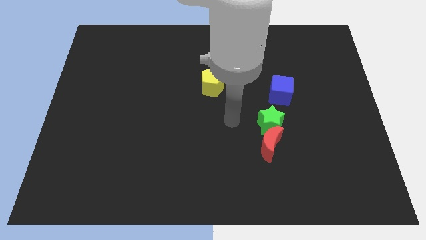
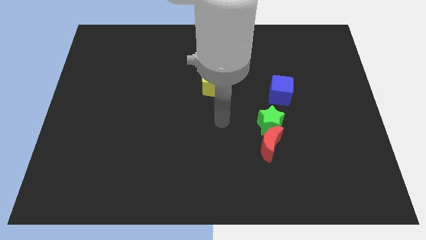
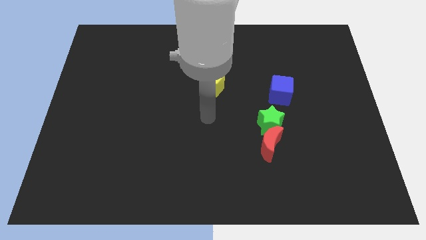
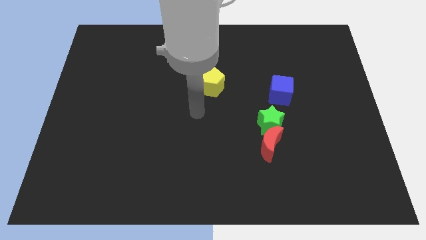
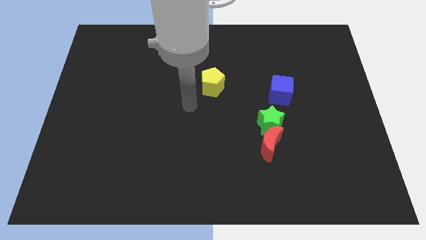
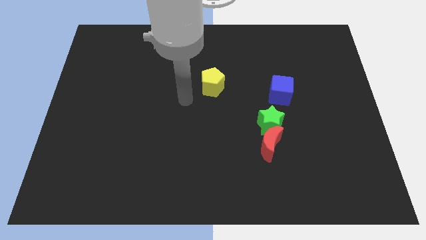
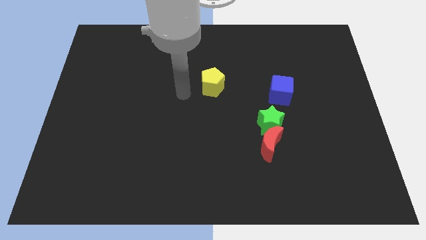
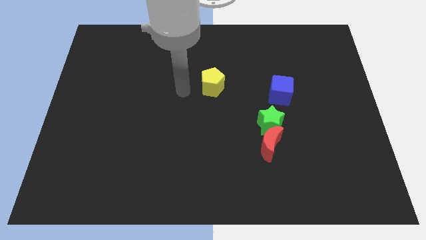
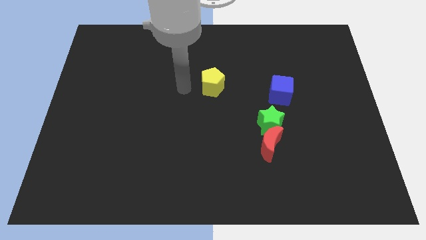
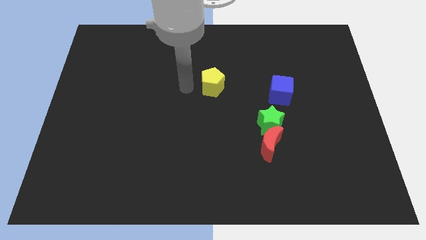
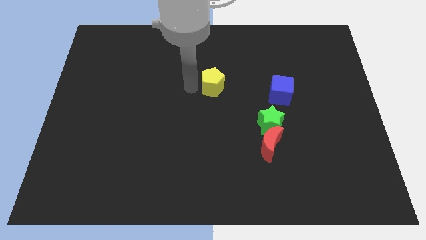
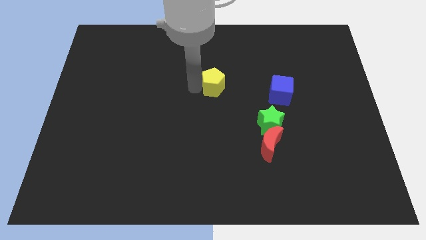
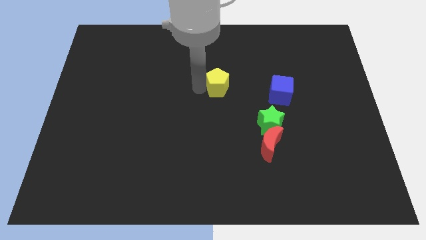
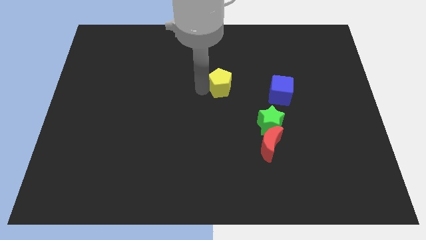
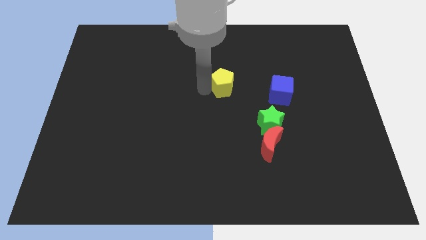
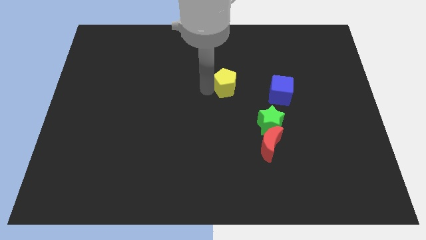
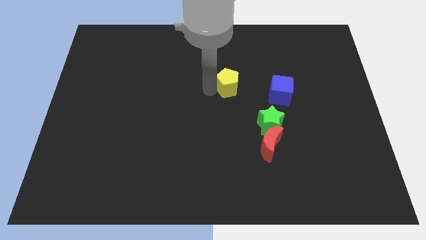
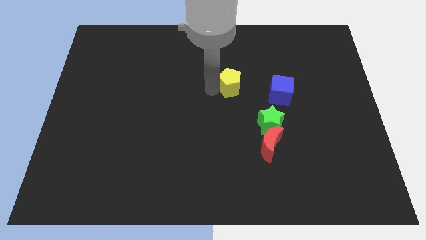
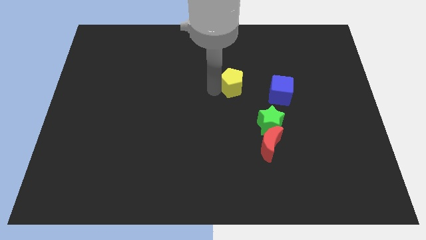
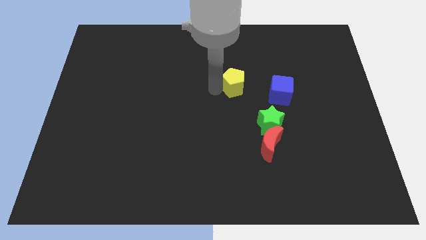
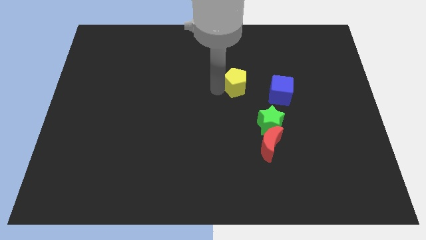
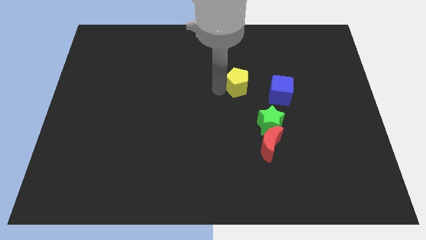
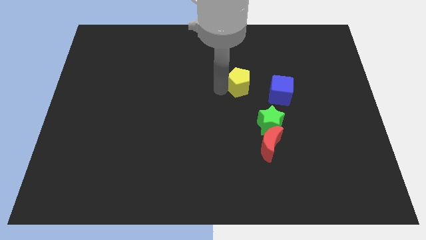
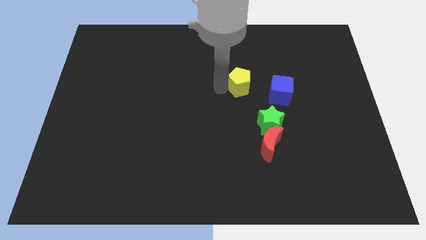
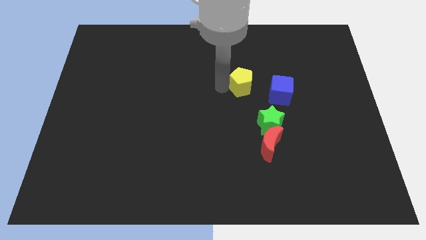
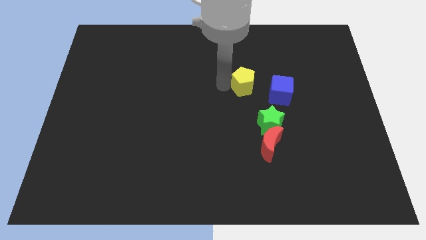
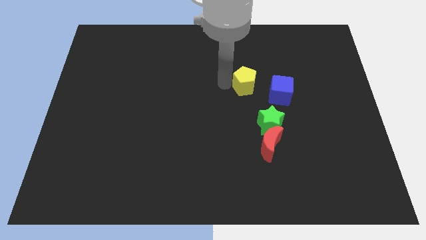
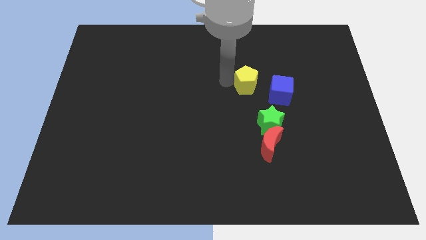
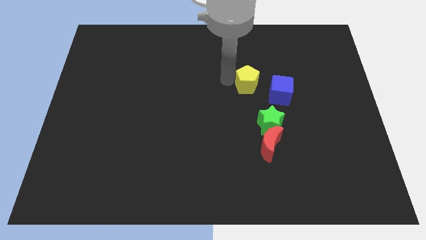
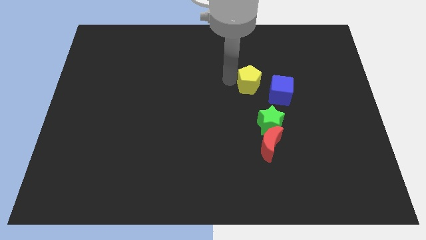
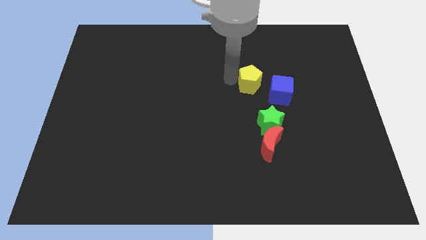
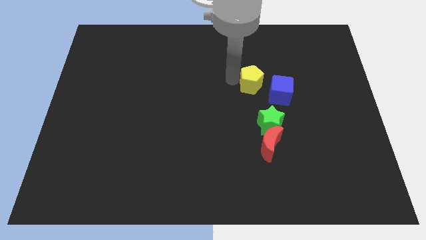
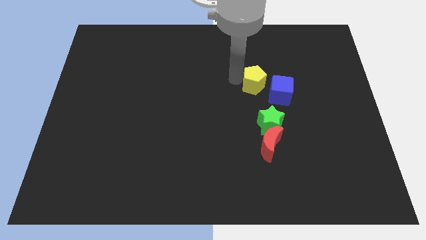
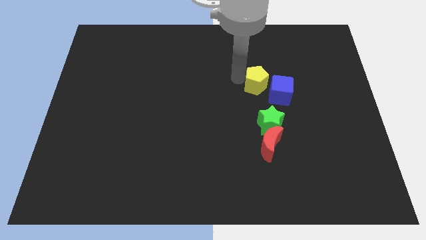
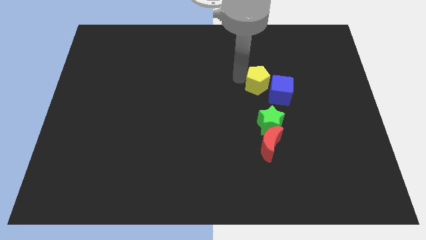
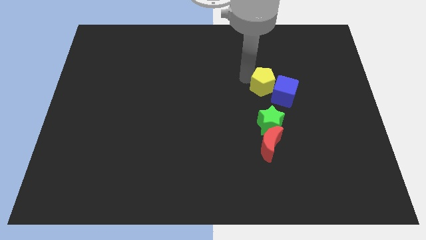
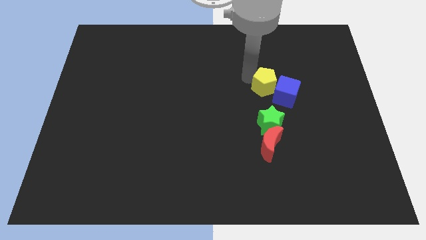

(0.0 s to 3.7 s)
push the yellow block close to the blue cube

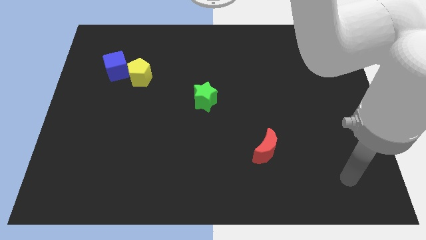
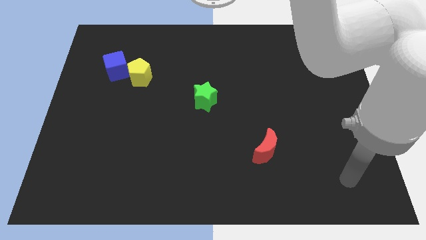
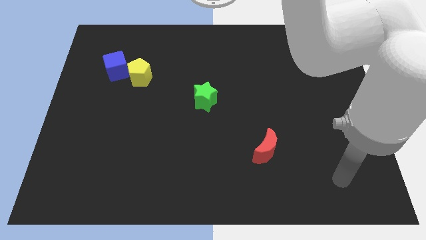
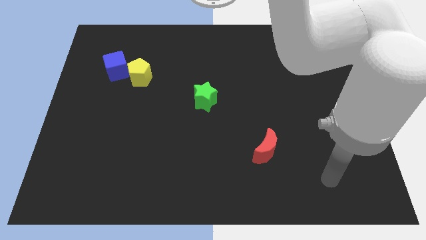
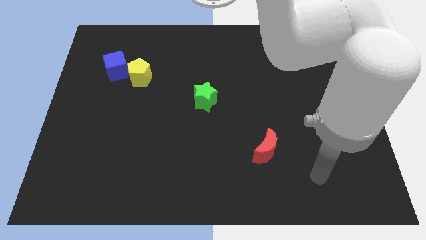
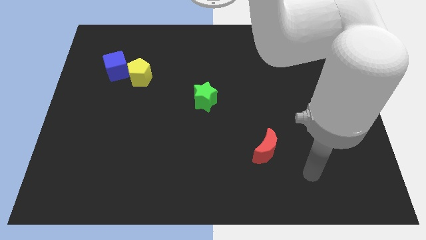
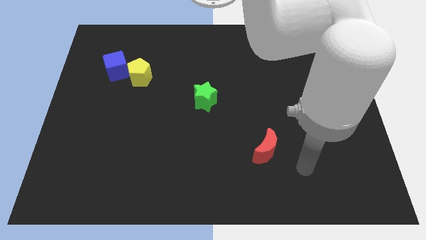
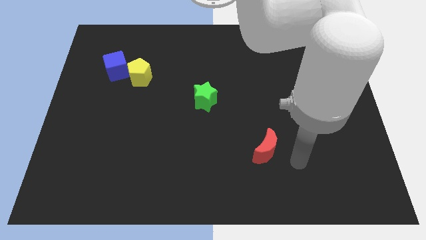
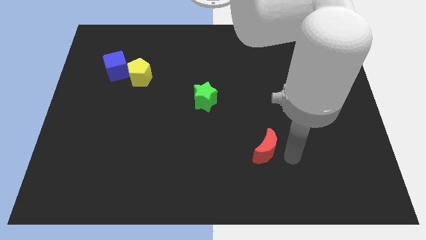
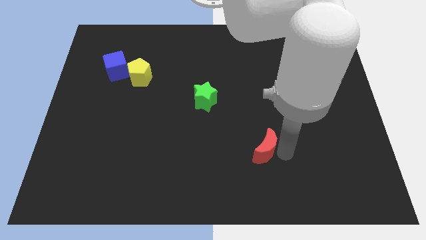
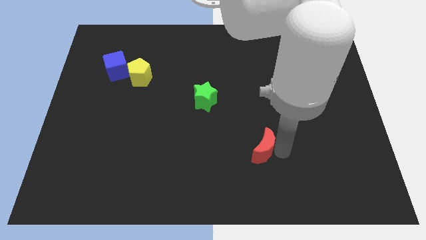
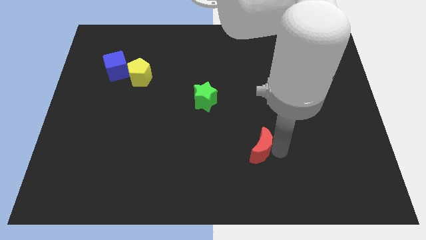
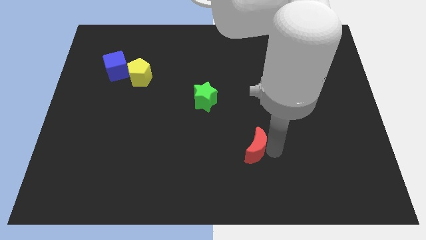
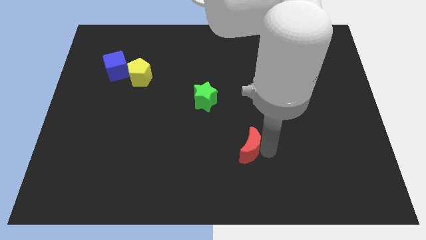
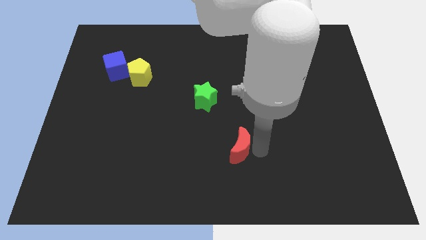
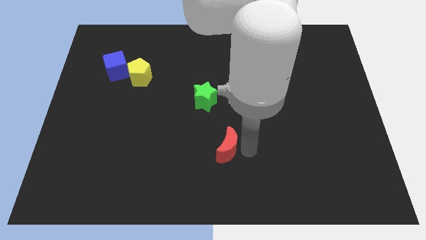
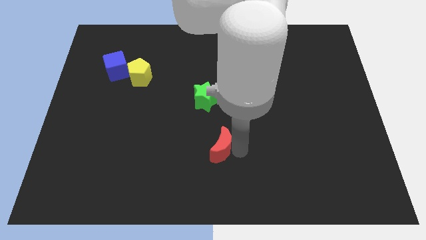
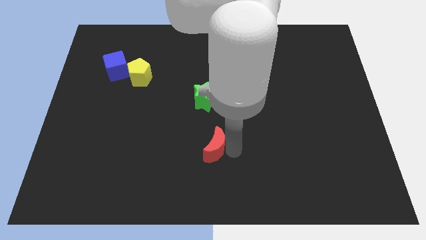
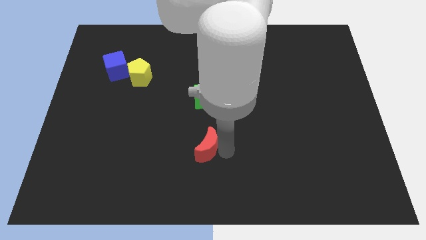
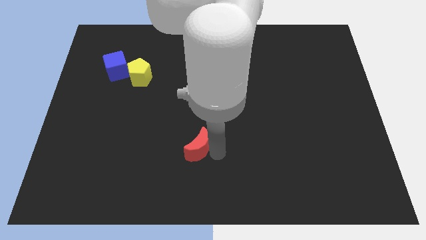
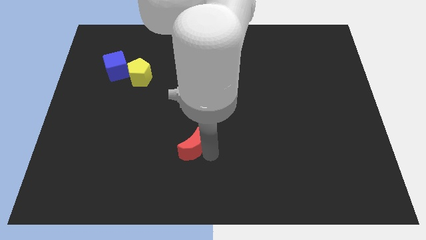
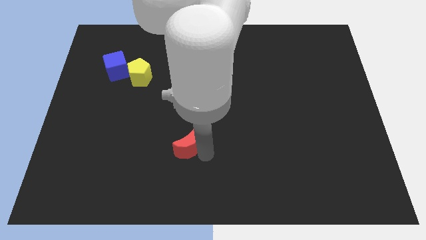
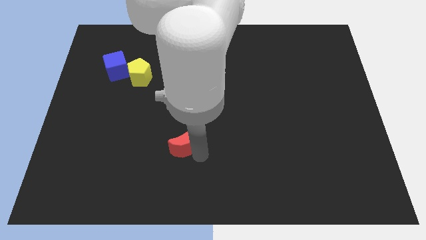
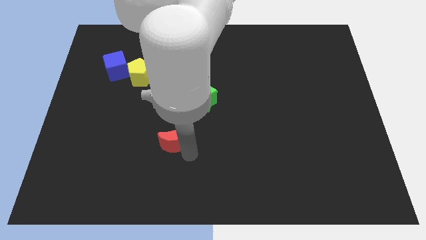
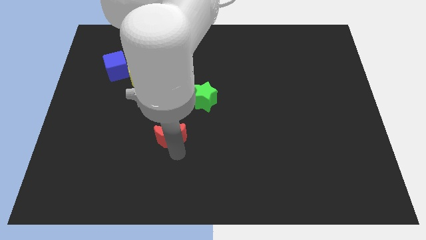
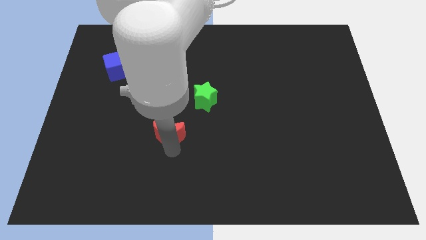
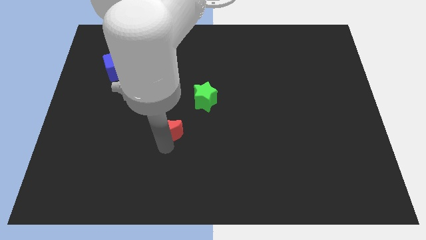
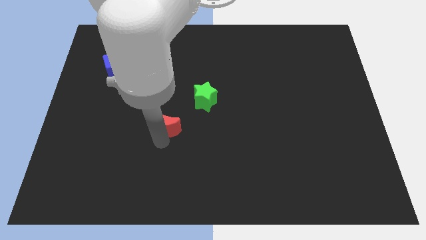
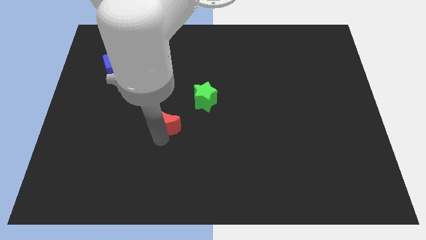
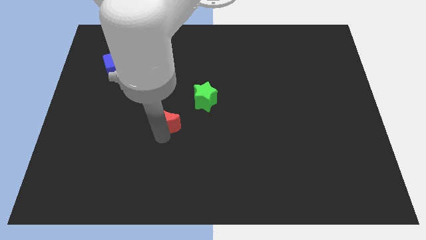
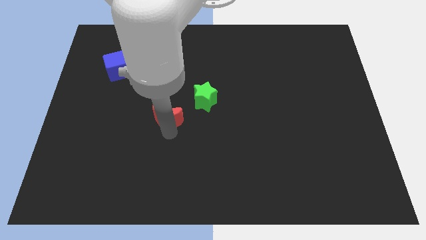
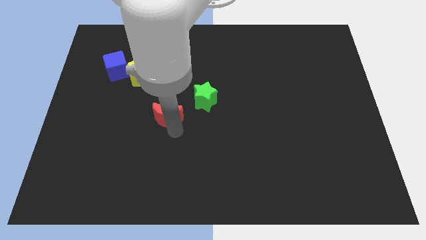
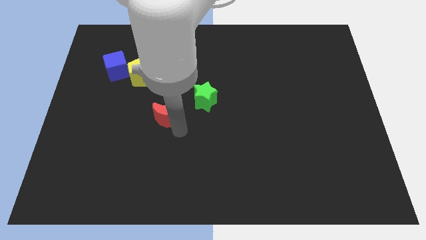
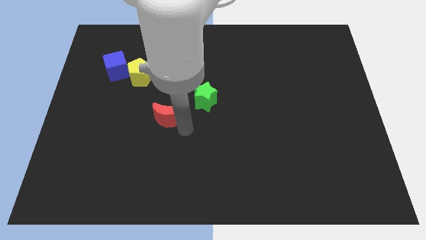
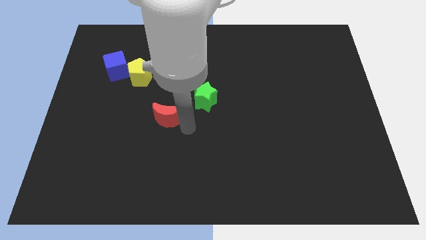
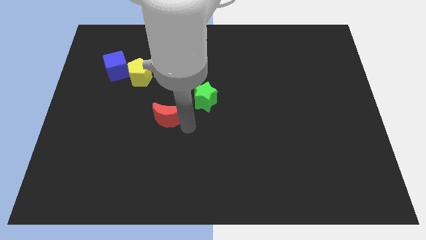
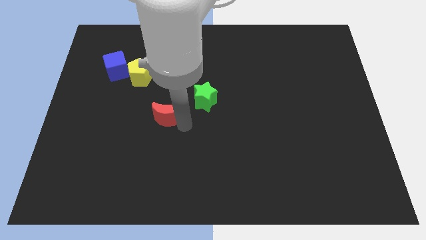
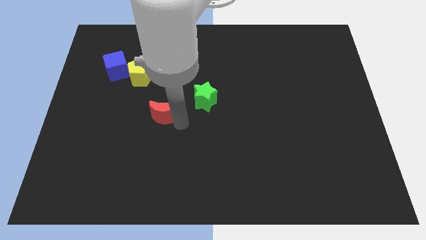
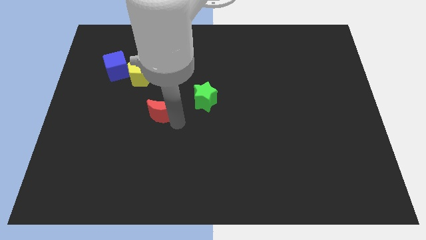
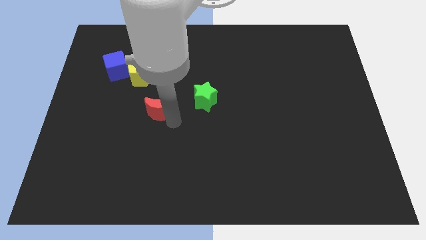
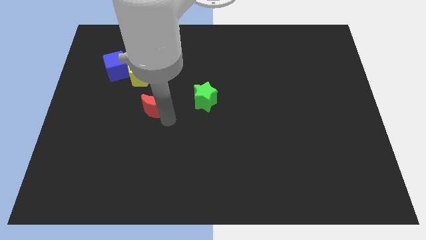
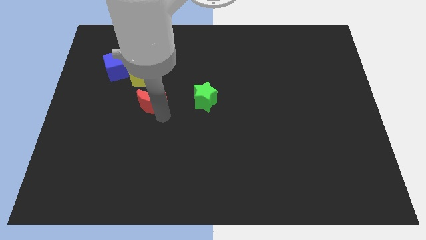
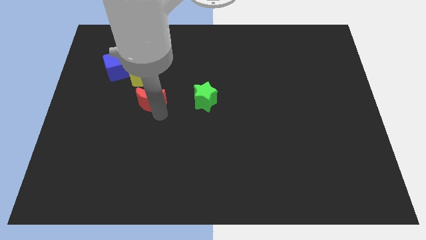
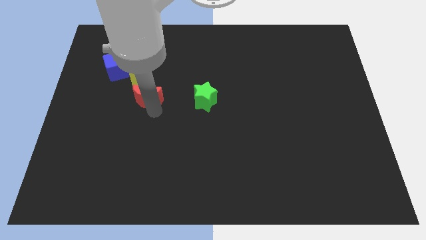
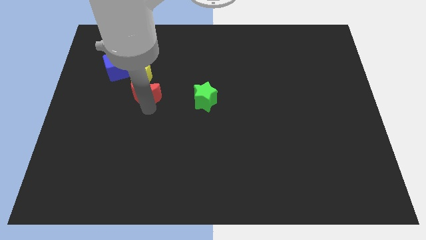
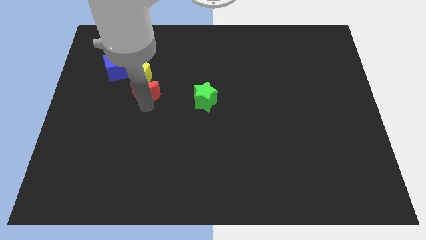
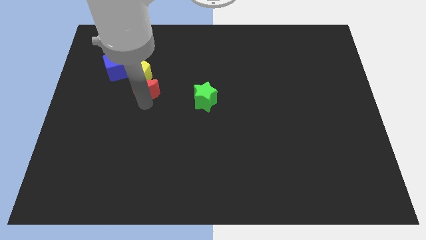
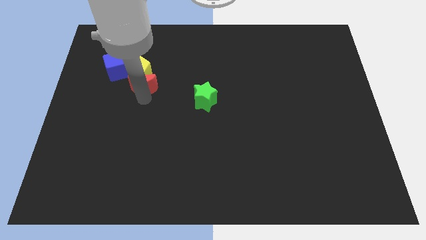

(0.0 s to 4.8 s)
slide the red block next to the yellow block
